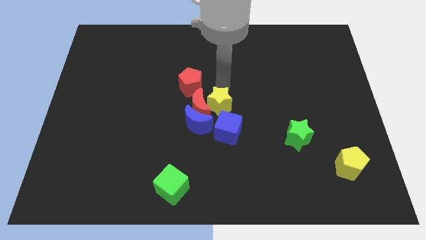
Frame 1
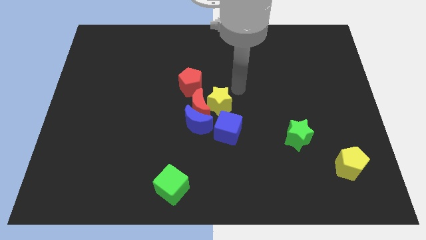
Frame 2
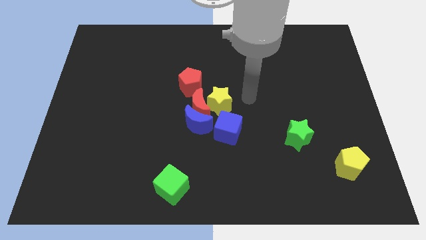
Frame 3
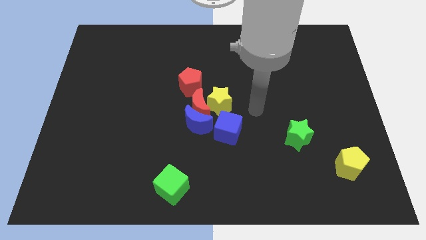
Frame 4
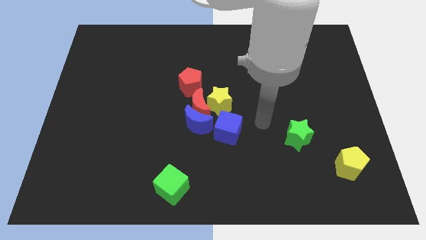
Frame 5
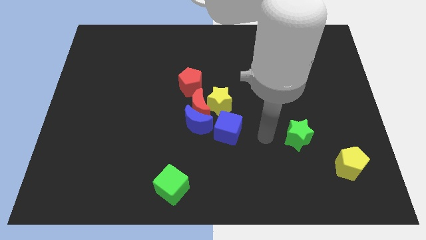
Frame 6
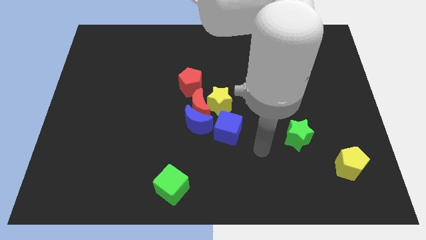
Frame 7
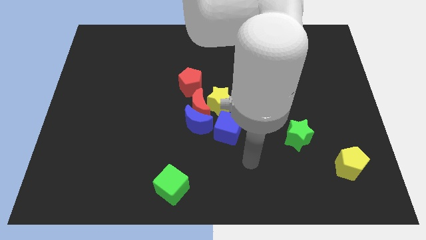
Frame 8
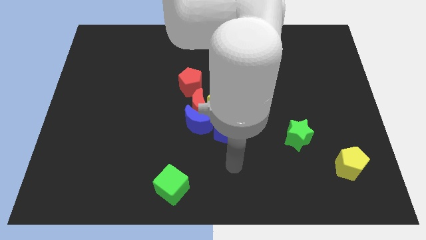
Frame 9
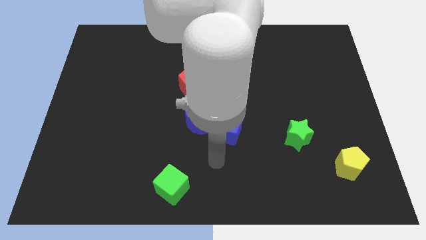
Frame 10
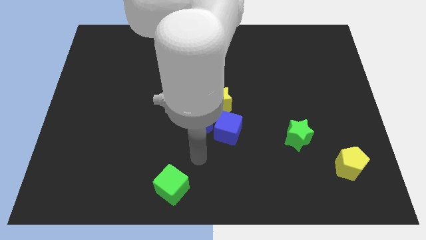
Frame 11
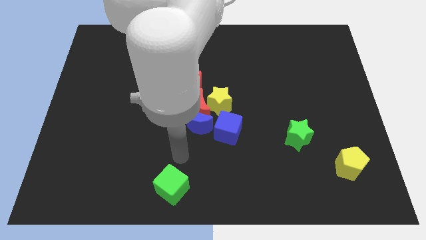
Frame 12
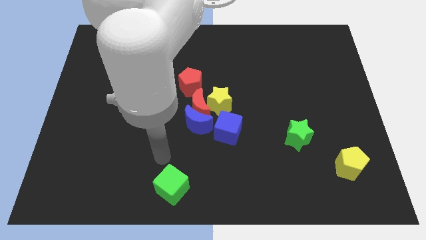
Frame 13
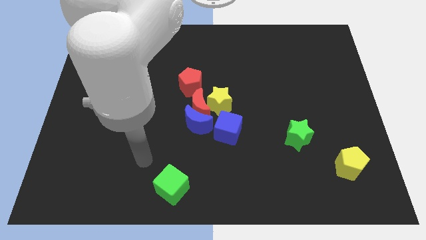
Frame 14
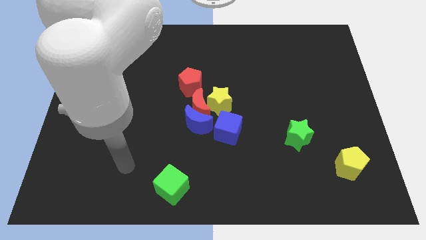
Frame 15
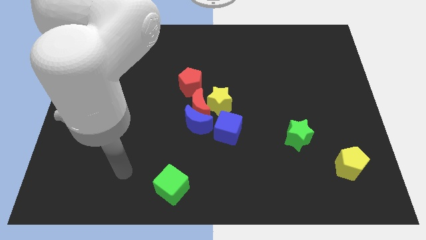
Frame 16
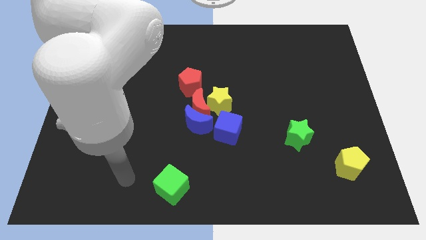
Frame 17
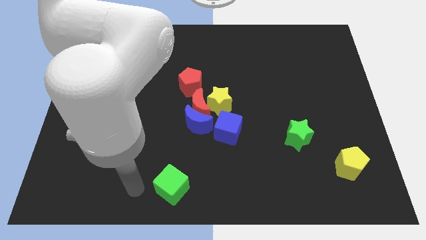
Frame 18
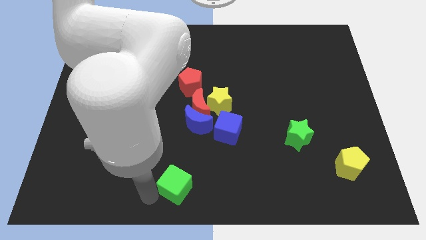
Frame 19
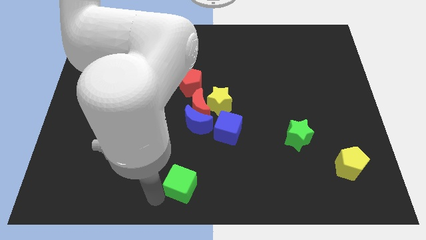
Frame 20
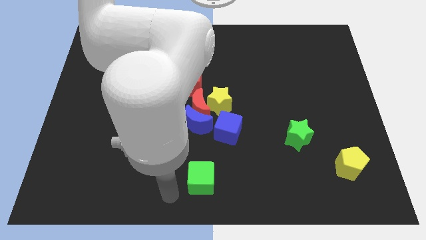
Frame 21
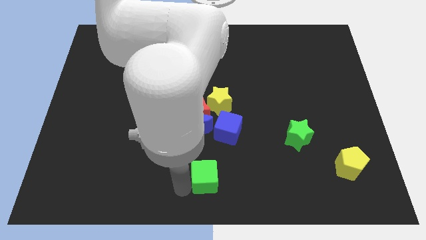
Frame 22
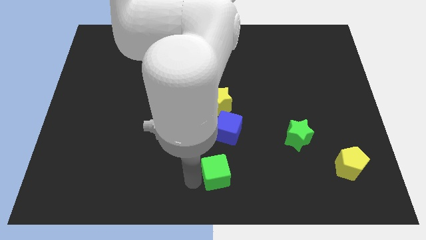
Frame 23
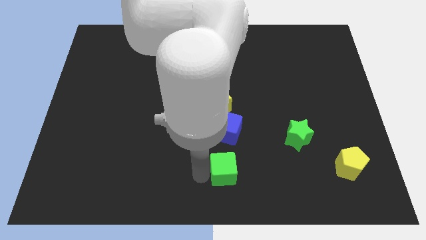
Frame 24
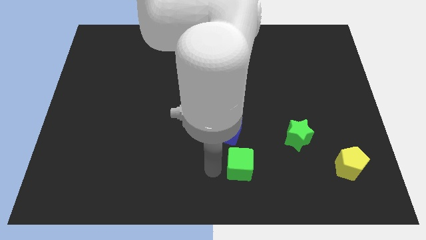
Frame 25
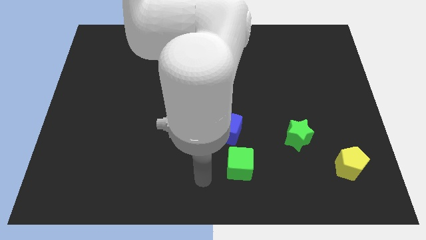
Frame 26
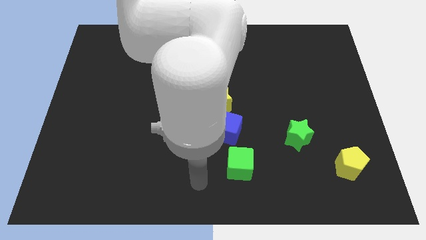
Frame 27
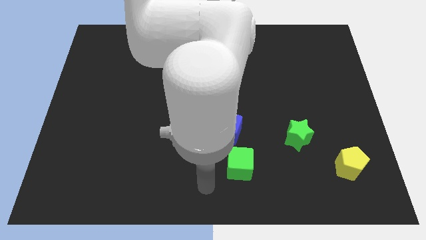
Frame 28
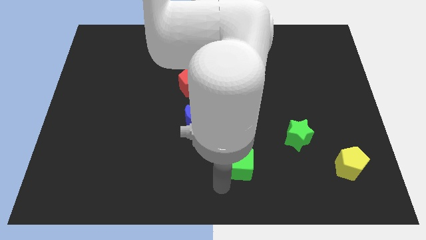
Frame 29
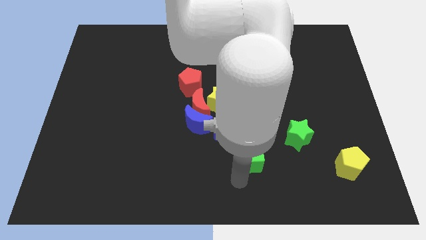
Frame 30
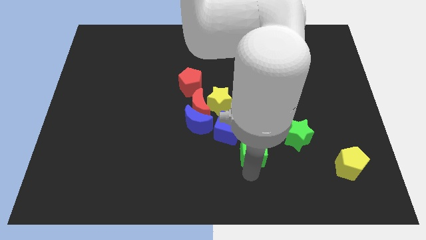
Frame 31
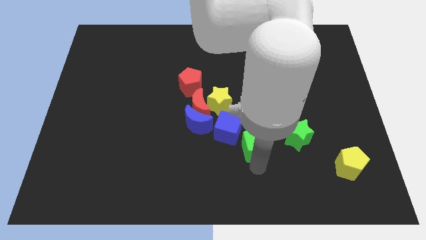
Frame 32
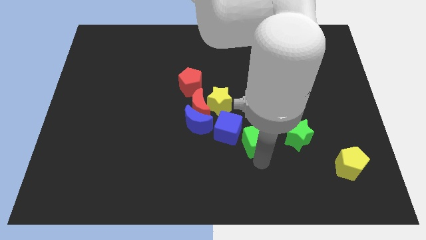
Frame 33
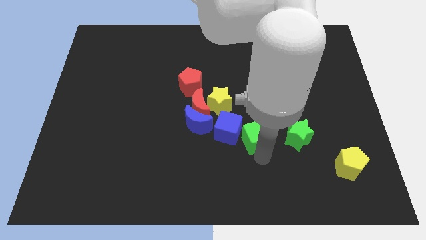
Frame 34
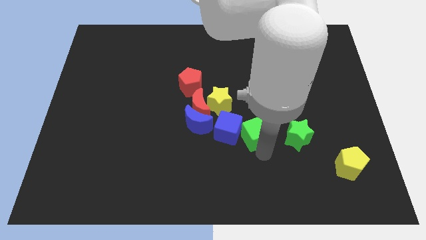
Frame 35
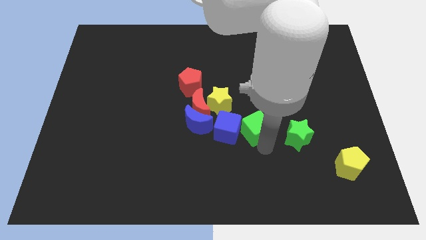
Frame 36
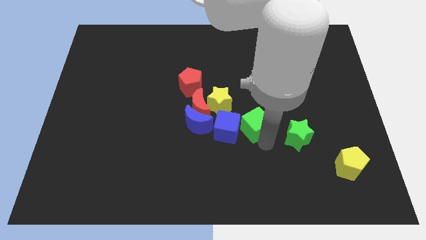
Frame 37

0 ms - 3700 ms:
drag the green cube into the right side of the blue cube

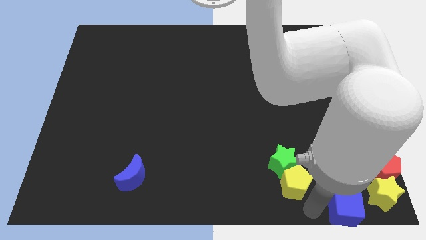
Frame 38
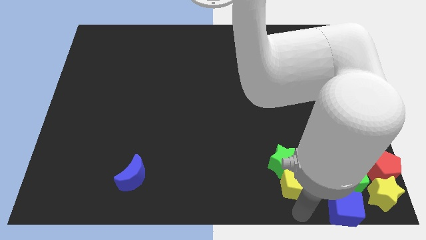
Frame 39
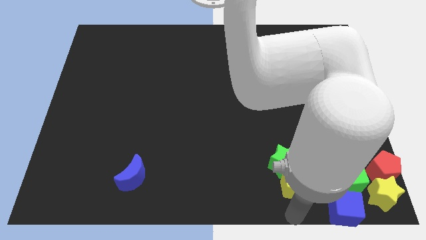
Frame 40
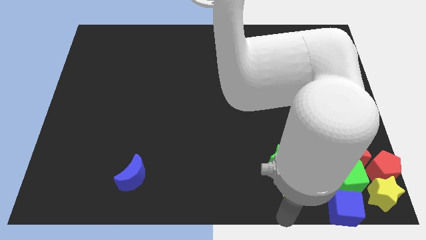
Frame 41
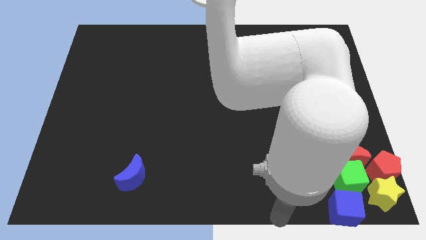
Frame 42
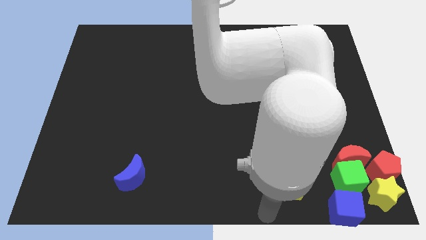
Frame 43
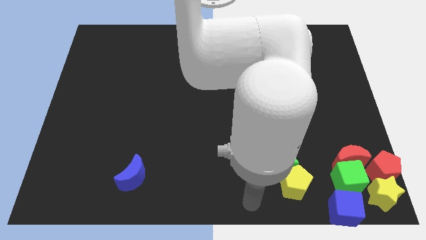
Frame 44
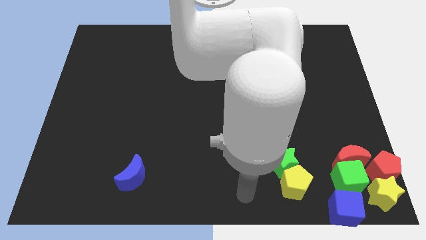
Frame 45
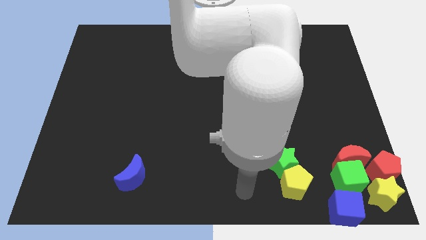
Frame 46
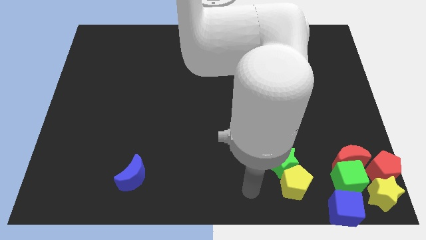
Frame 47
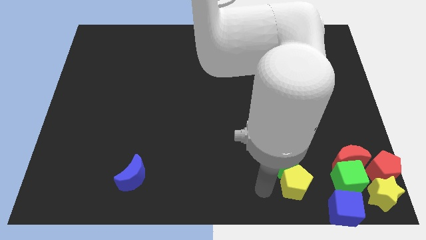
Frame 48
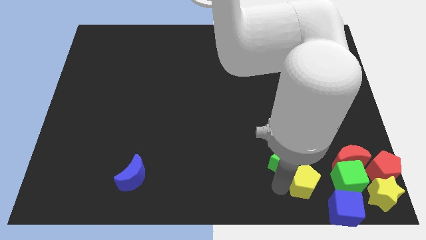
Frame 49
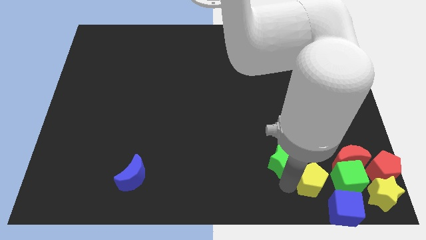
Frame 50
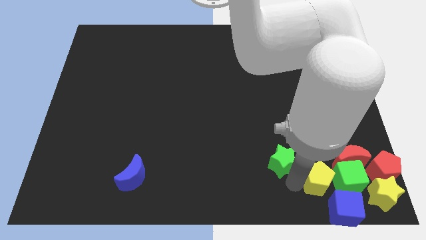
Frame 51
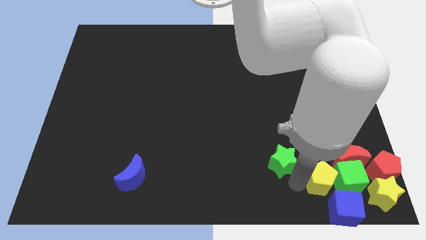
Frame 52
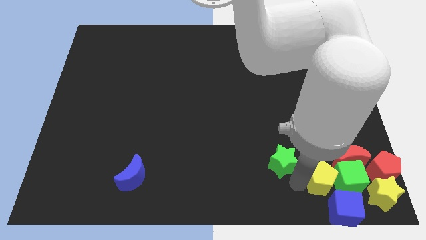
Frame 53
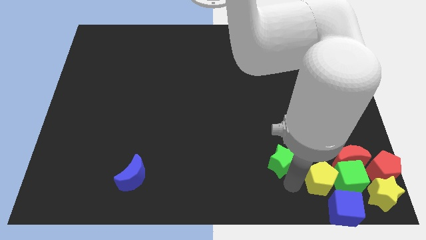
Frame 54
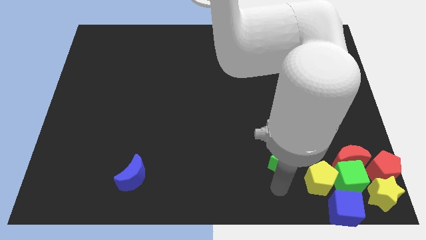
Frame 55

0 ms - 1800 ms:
move the yellow pentagon close to the green cube

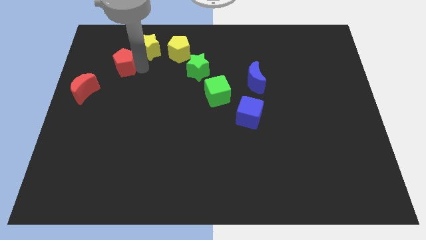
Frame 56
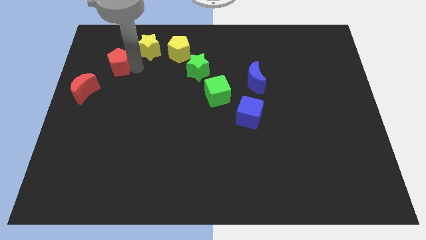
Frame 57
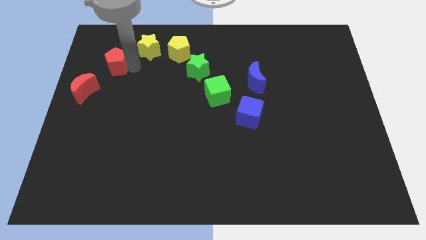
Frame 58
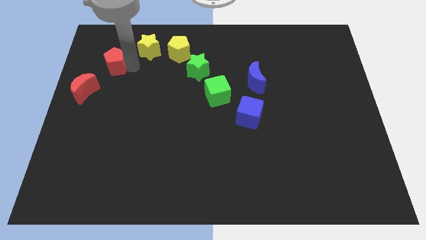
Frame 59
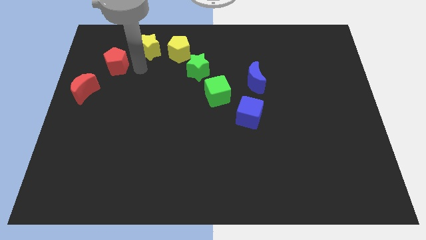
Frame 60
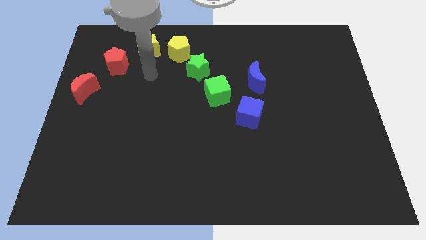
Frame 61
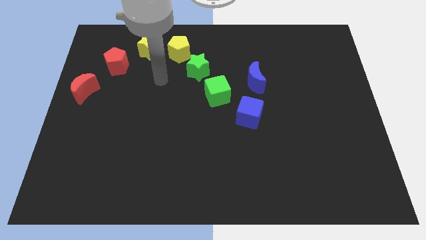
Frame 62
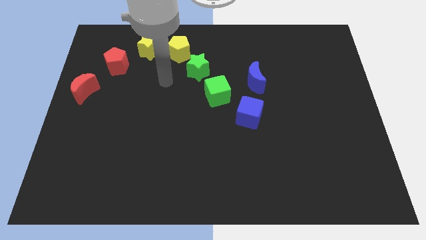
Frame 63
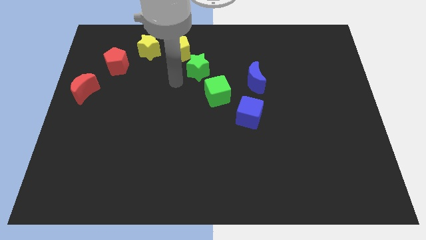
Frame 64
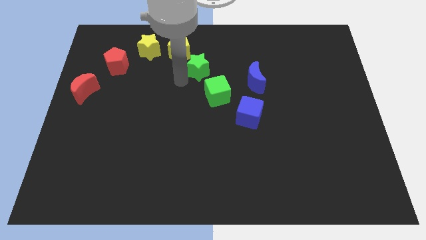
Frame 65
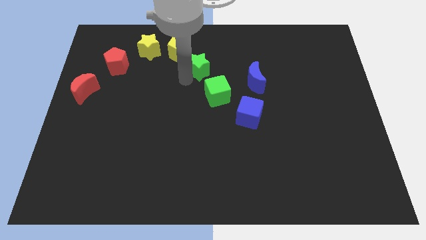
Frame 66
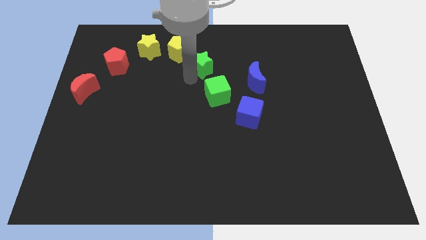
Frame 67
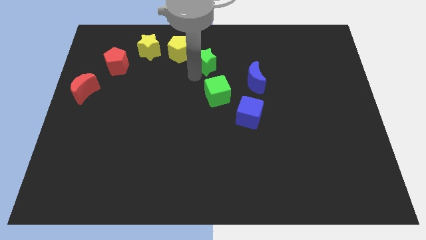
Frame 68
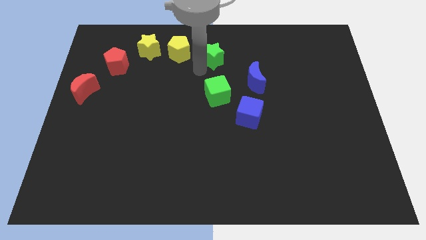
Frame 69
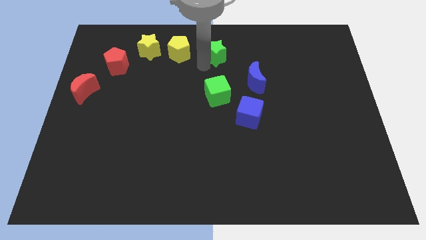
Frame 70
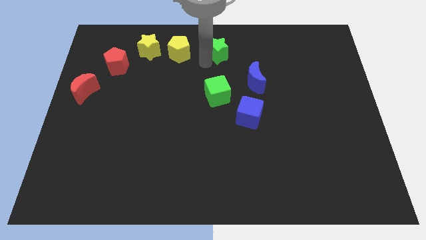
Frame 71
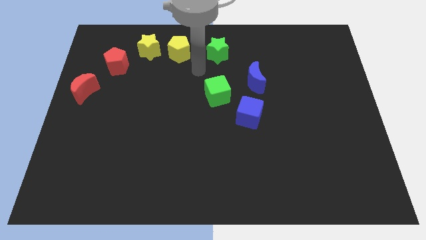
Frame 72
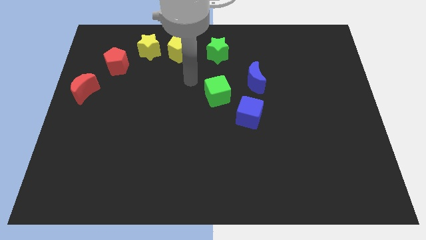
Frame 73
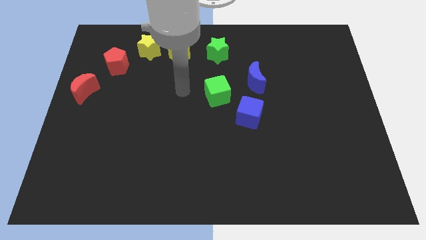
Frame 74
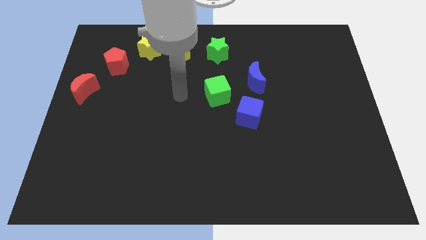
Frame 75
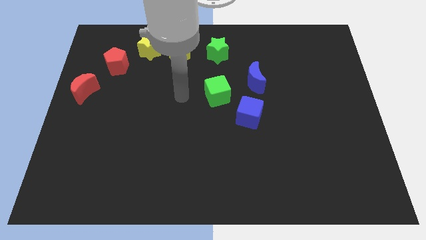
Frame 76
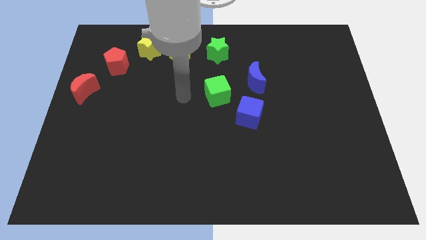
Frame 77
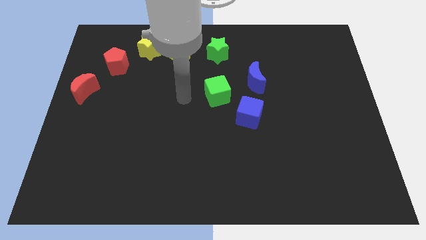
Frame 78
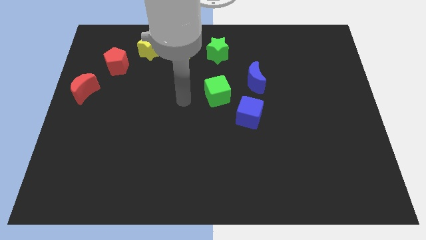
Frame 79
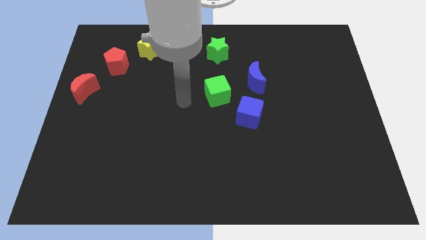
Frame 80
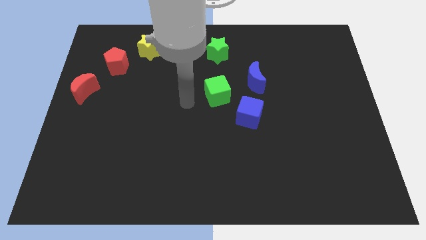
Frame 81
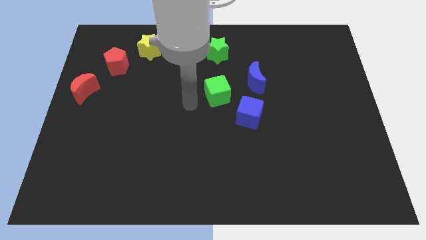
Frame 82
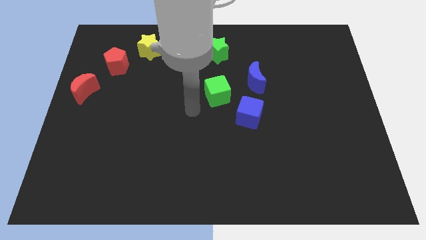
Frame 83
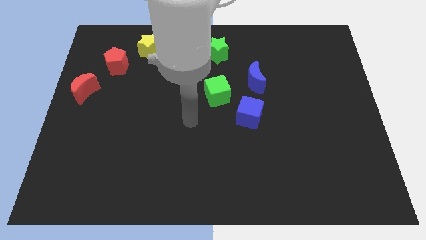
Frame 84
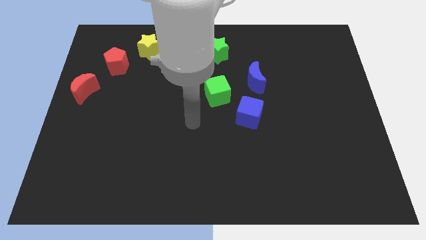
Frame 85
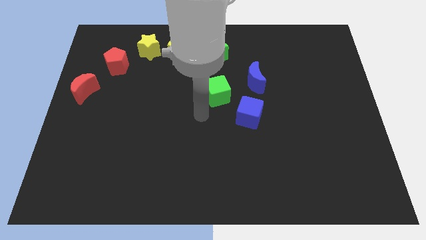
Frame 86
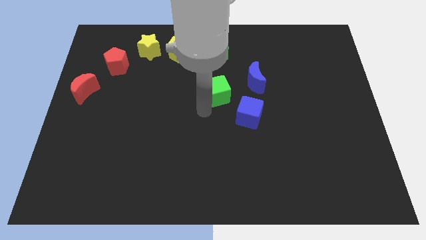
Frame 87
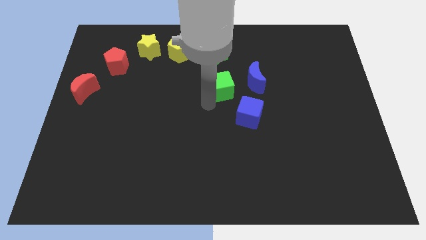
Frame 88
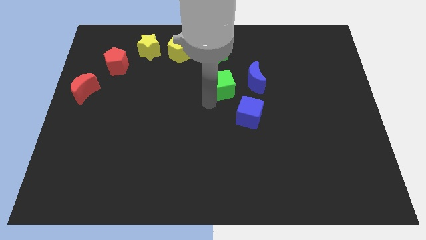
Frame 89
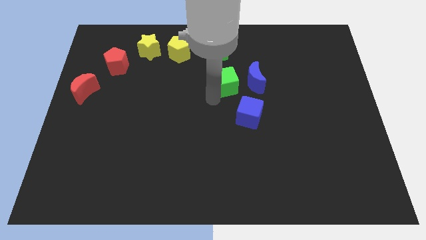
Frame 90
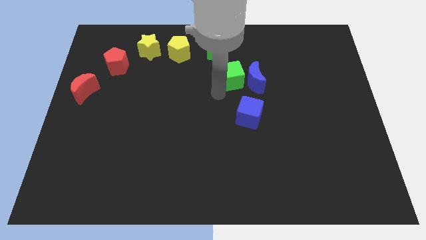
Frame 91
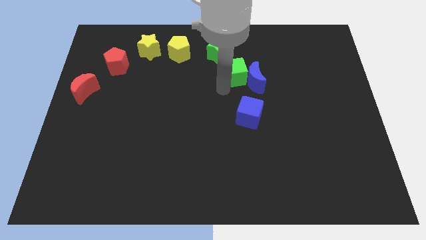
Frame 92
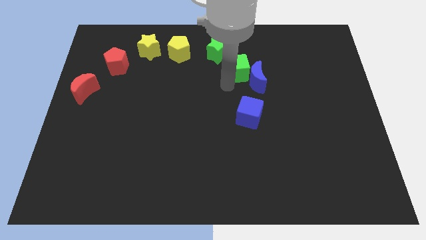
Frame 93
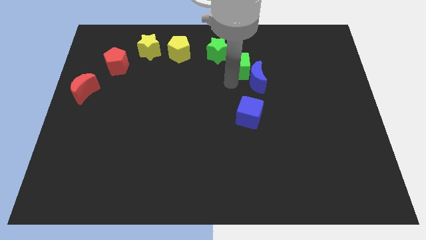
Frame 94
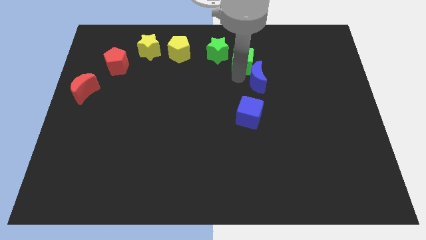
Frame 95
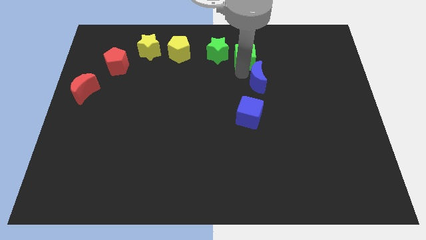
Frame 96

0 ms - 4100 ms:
move the group of blocks to form a semi circle with the other blocks
